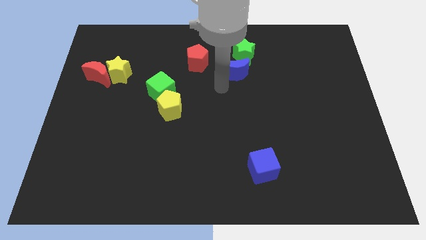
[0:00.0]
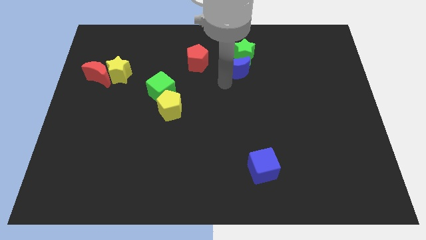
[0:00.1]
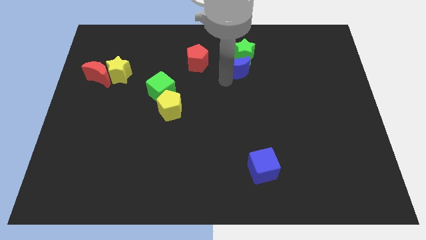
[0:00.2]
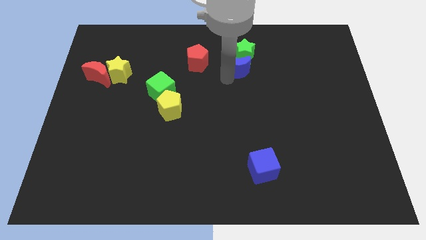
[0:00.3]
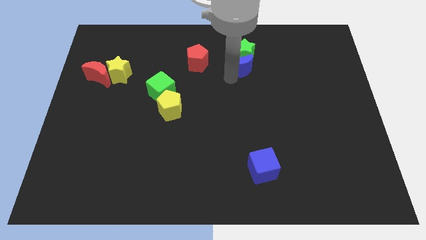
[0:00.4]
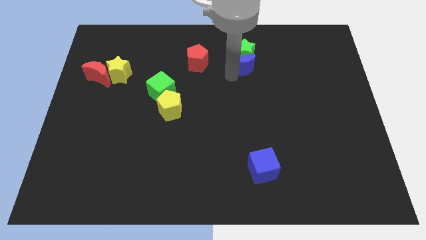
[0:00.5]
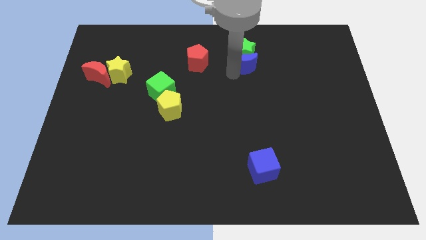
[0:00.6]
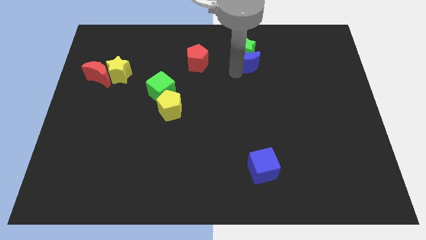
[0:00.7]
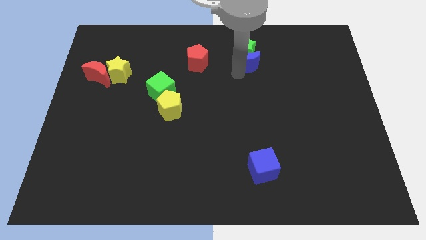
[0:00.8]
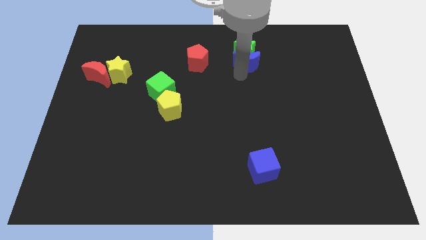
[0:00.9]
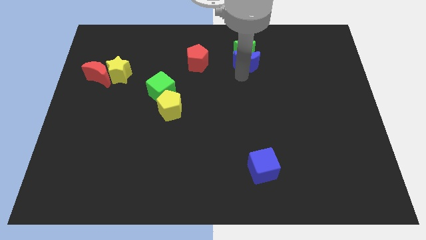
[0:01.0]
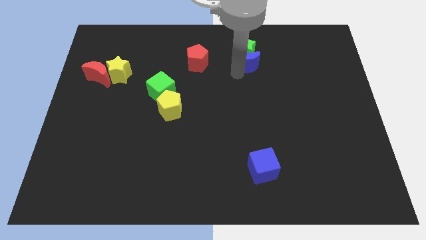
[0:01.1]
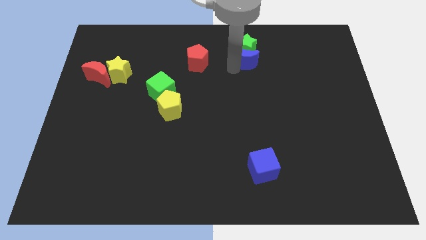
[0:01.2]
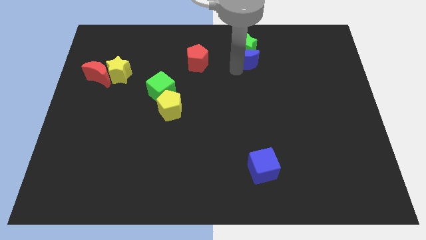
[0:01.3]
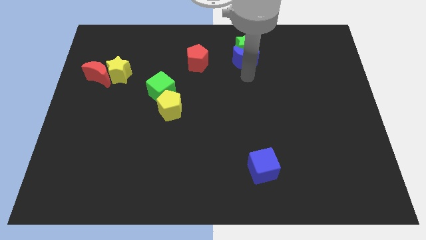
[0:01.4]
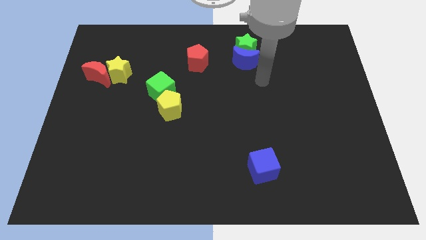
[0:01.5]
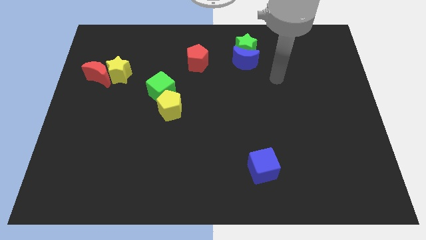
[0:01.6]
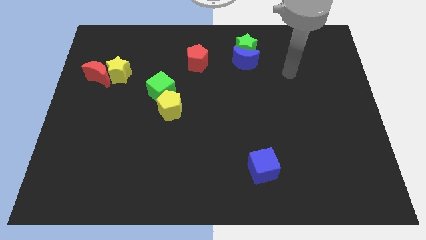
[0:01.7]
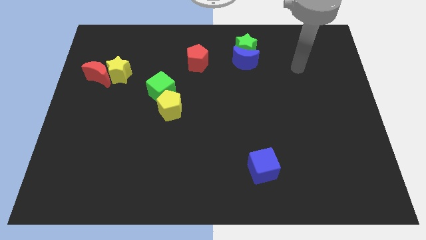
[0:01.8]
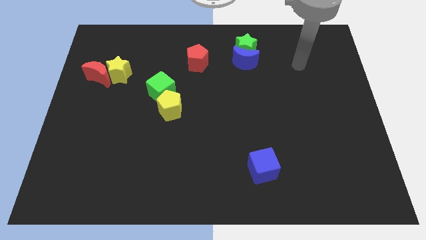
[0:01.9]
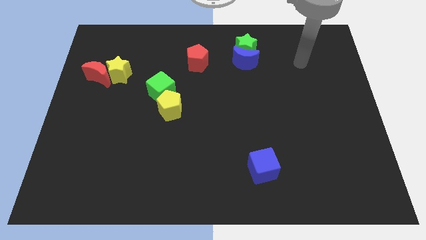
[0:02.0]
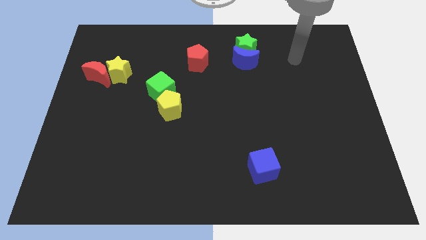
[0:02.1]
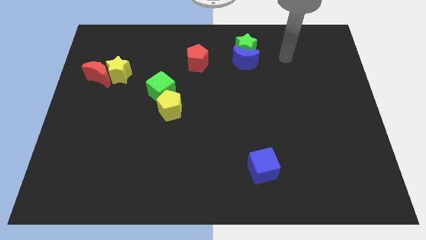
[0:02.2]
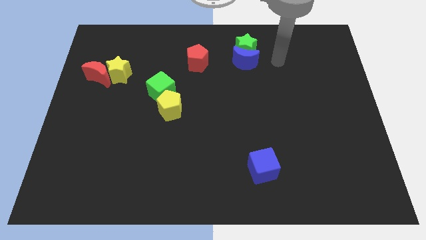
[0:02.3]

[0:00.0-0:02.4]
slightly push the blue moon into green star

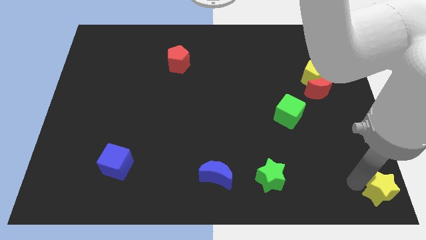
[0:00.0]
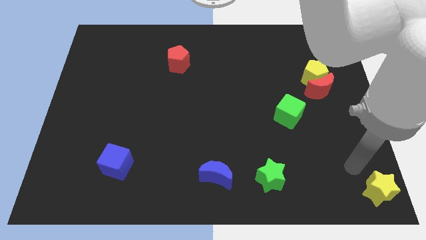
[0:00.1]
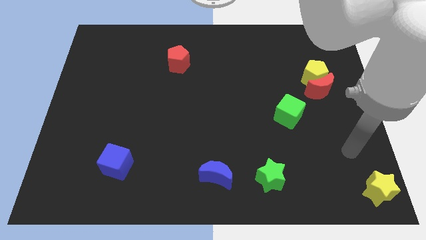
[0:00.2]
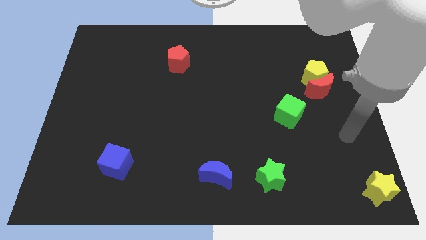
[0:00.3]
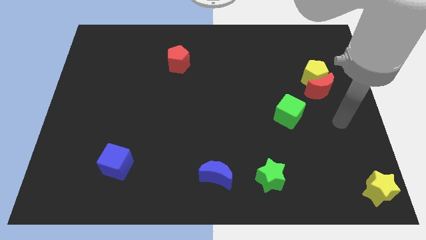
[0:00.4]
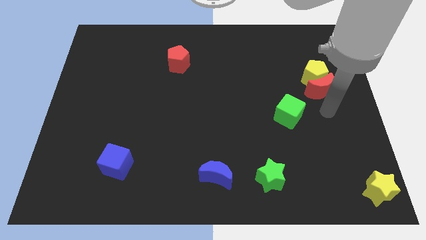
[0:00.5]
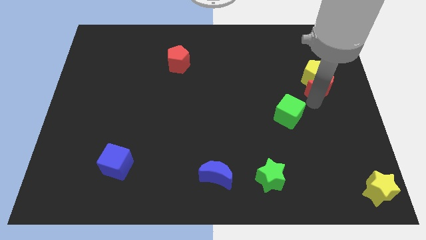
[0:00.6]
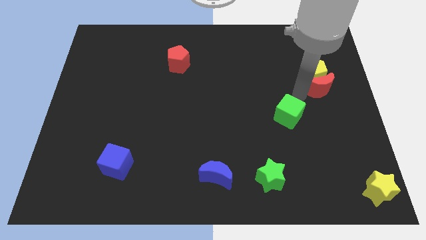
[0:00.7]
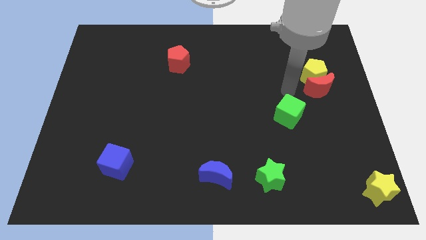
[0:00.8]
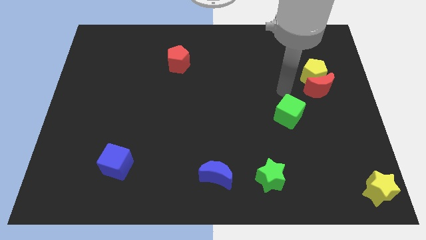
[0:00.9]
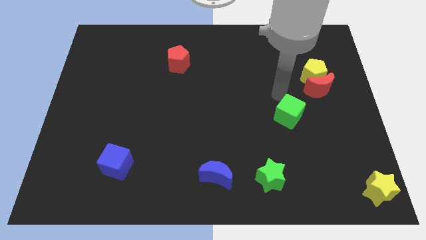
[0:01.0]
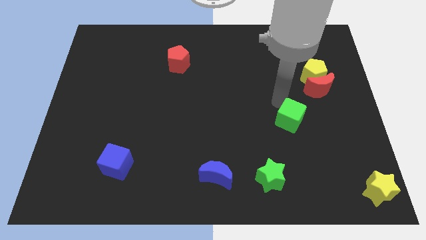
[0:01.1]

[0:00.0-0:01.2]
point your arm at the top of the green cube

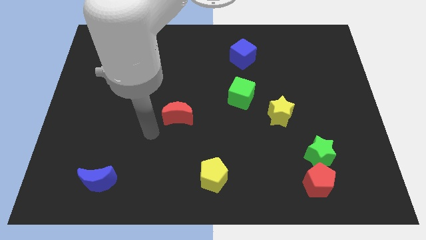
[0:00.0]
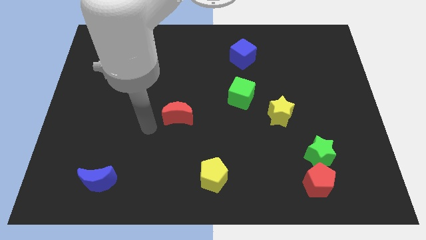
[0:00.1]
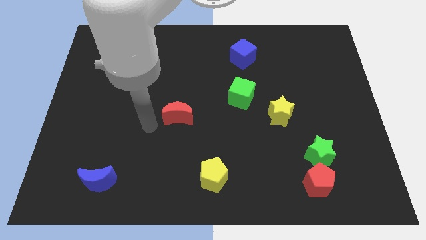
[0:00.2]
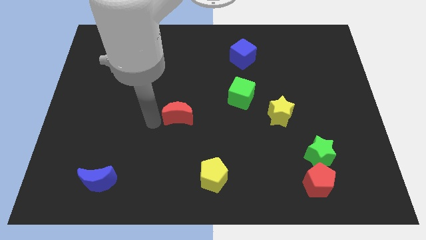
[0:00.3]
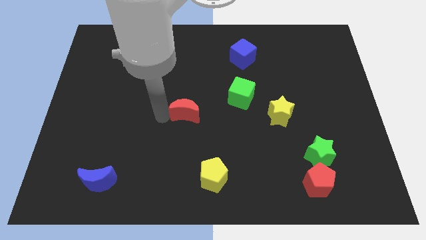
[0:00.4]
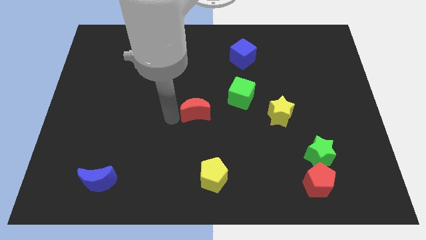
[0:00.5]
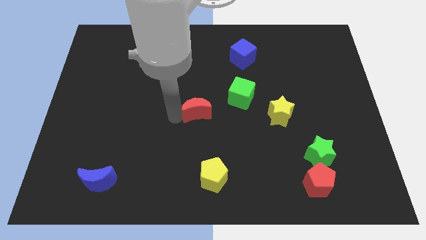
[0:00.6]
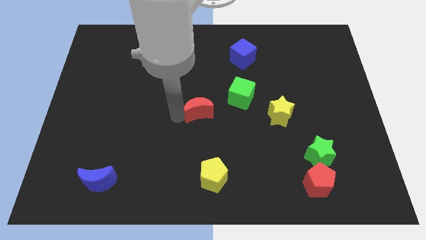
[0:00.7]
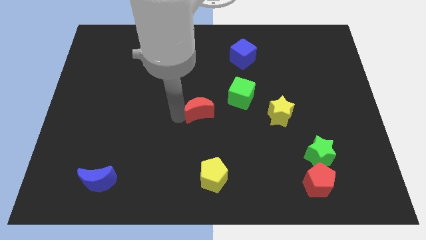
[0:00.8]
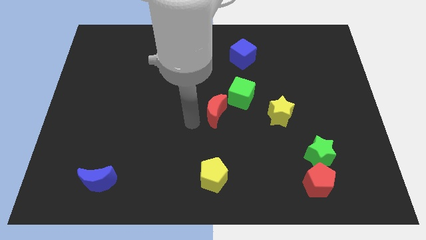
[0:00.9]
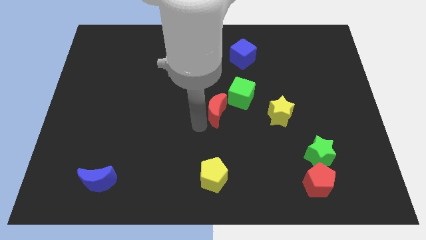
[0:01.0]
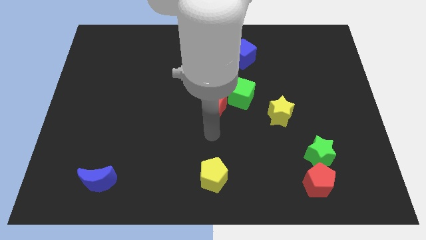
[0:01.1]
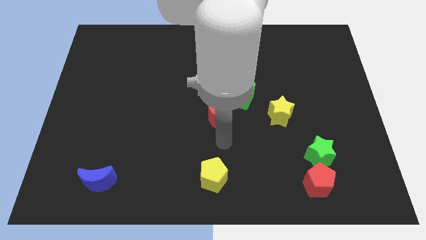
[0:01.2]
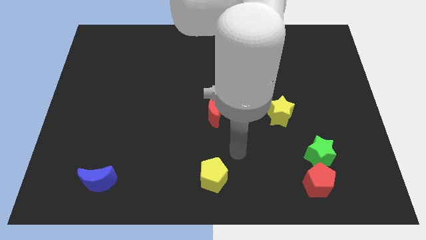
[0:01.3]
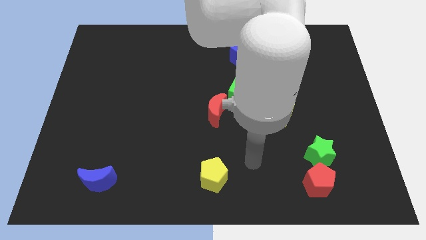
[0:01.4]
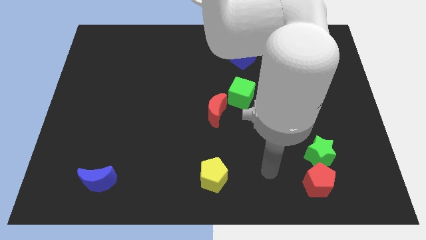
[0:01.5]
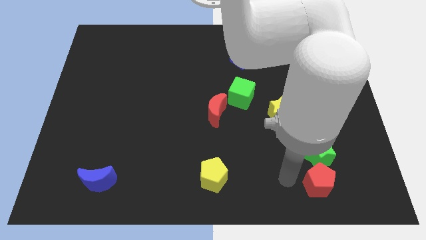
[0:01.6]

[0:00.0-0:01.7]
push the red moon to the bottom left side of the green cube

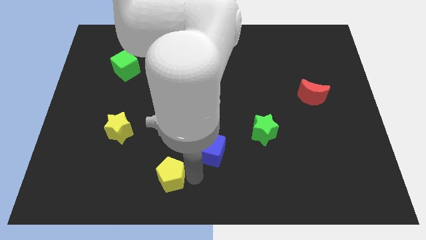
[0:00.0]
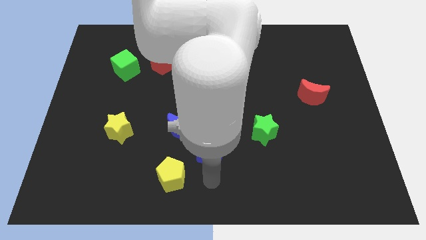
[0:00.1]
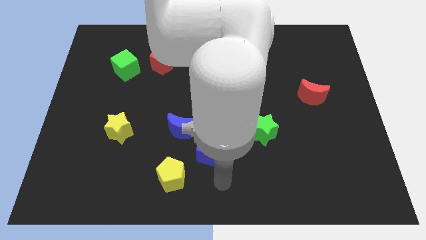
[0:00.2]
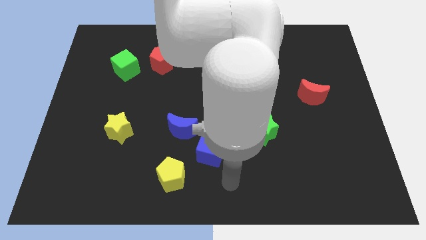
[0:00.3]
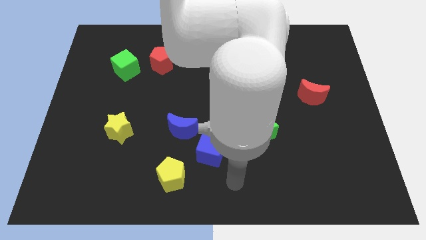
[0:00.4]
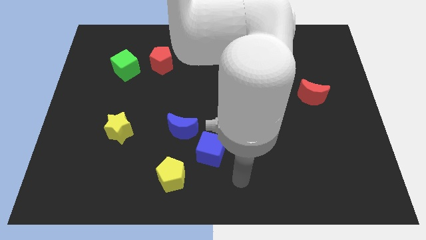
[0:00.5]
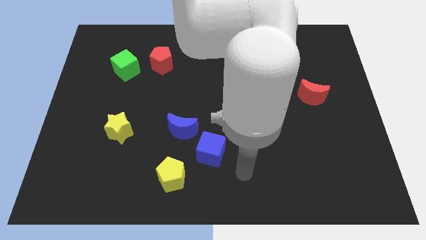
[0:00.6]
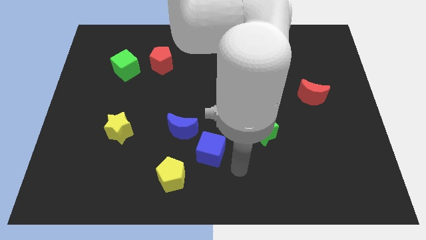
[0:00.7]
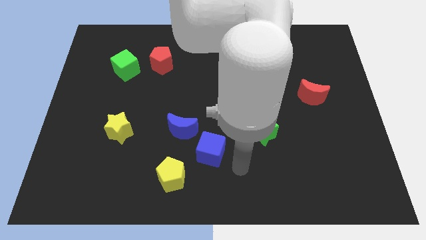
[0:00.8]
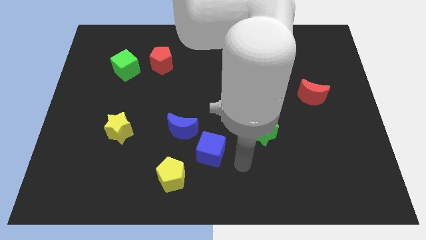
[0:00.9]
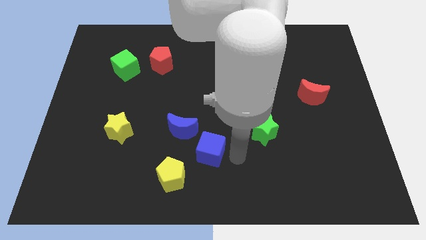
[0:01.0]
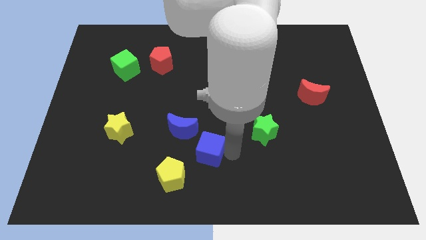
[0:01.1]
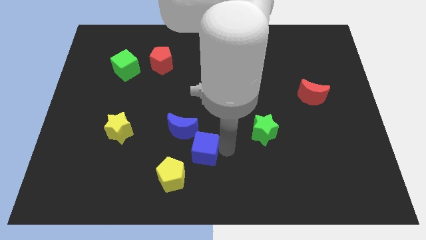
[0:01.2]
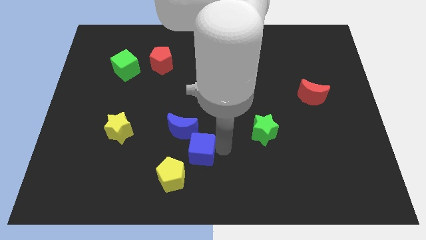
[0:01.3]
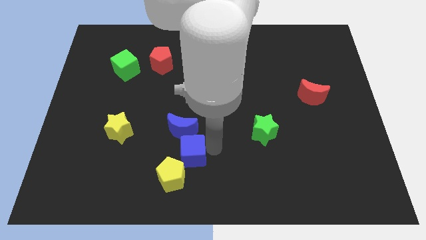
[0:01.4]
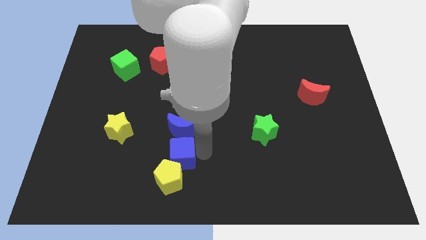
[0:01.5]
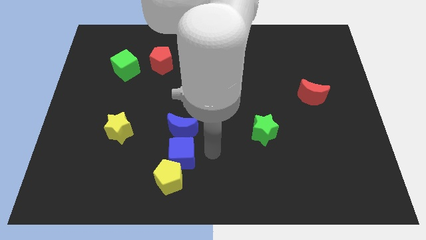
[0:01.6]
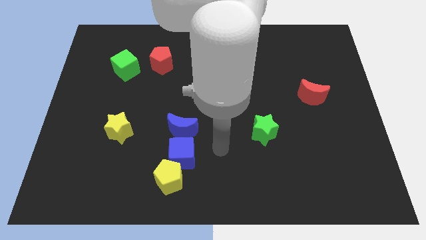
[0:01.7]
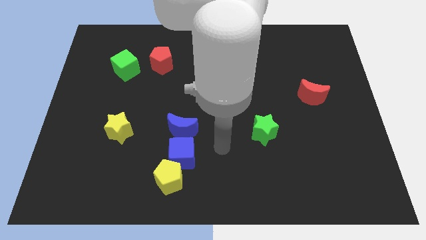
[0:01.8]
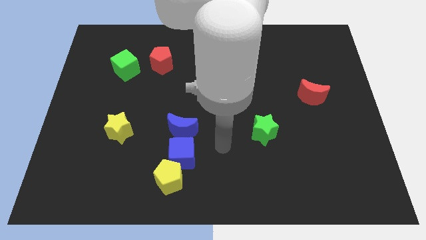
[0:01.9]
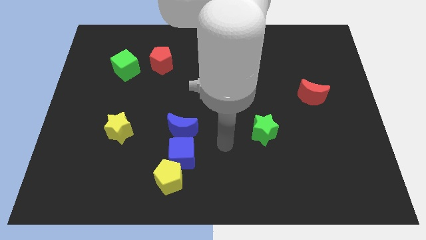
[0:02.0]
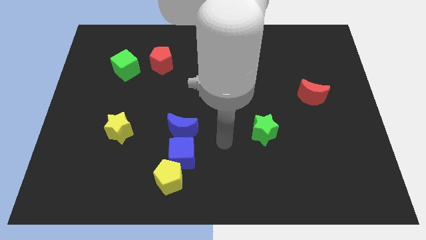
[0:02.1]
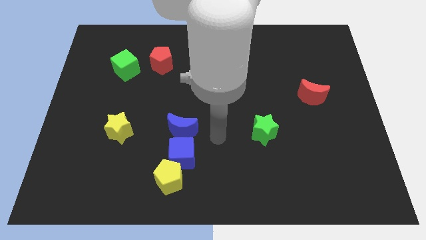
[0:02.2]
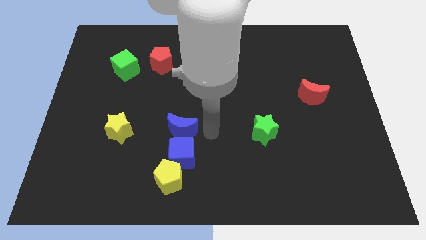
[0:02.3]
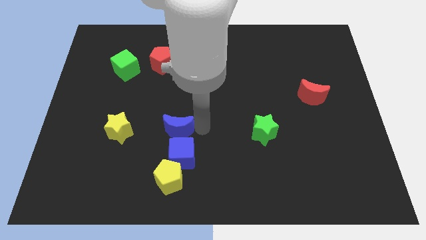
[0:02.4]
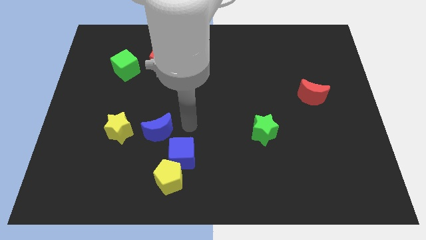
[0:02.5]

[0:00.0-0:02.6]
push blue cube blue moon slightly move towards left

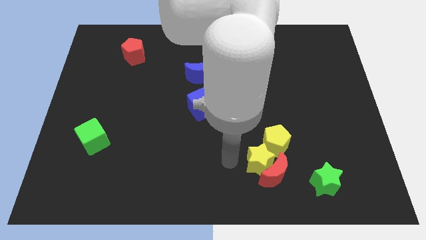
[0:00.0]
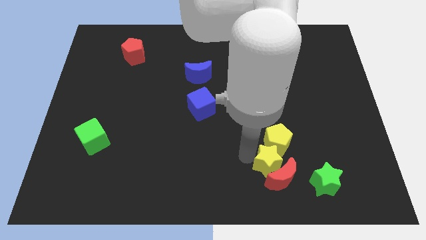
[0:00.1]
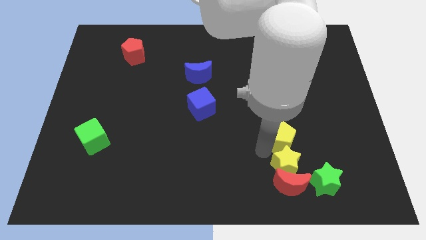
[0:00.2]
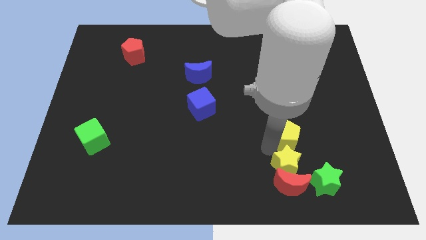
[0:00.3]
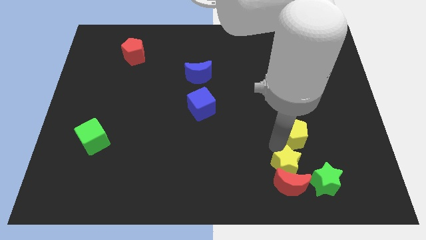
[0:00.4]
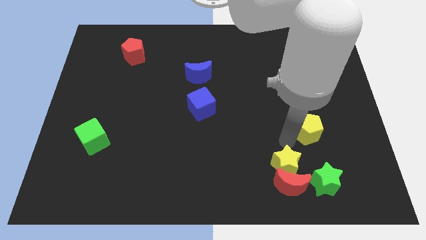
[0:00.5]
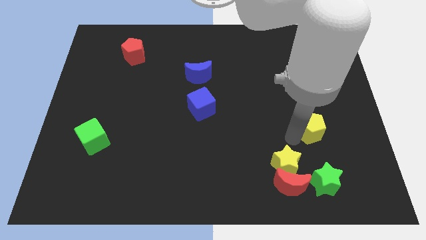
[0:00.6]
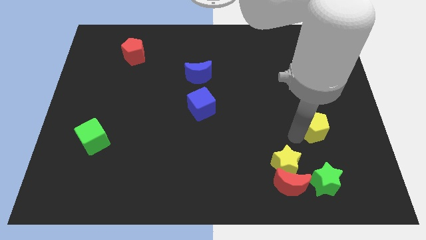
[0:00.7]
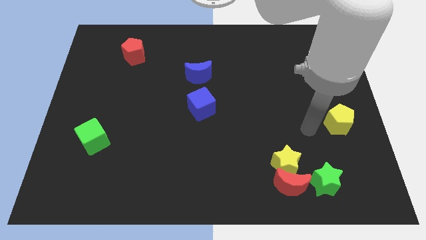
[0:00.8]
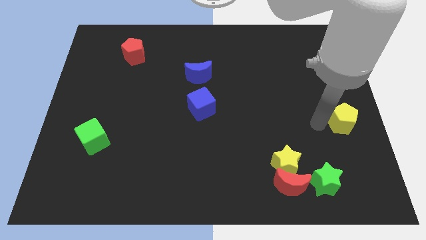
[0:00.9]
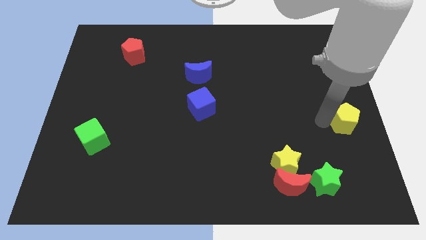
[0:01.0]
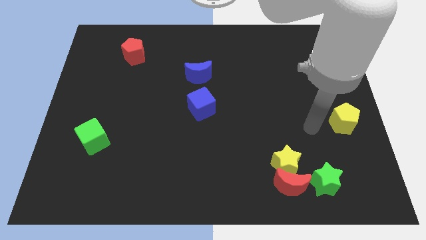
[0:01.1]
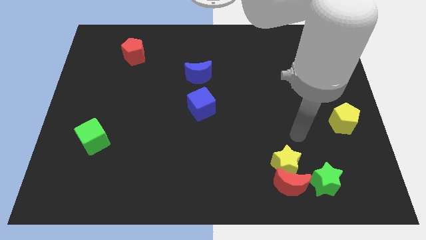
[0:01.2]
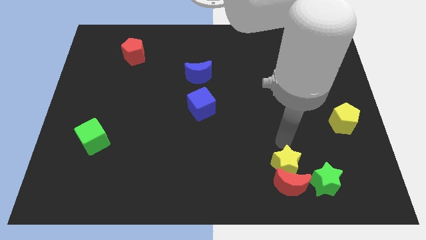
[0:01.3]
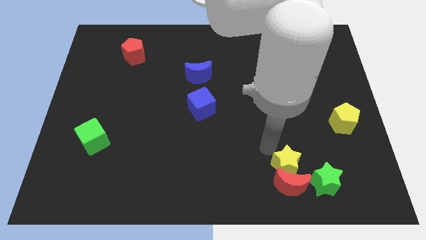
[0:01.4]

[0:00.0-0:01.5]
move the yellow pentagon to the centre right of board
